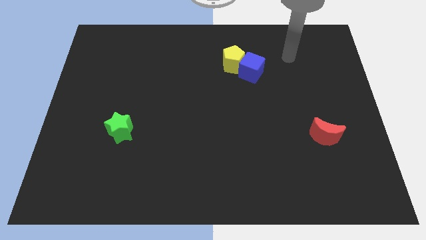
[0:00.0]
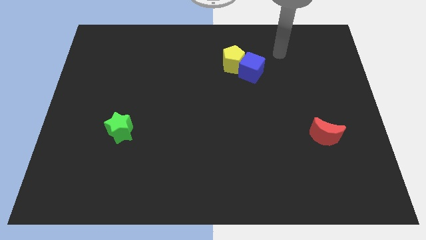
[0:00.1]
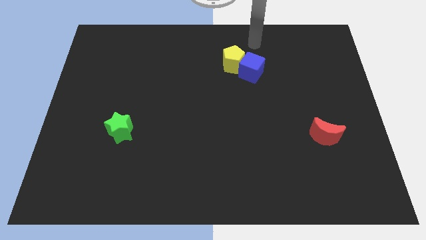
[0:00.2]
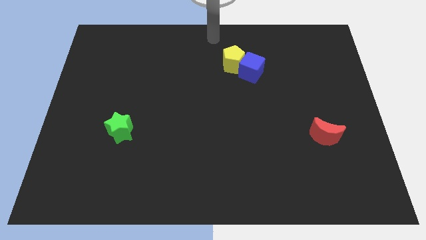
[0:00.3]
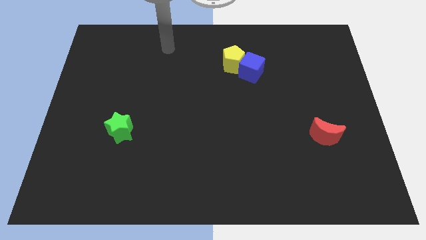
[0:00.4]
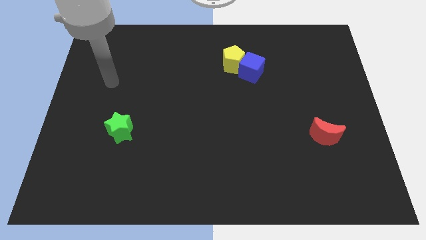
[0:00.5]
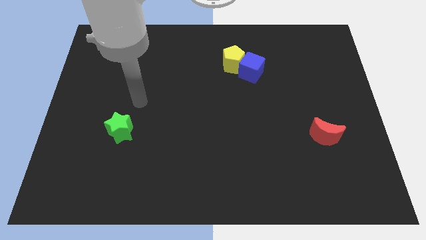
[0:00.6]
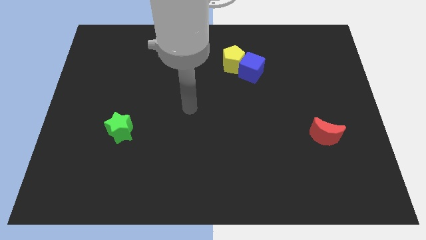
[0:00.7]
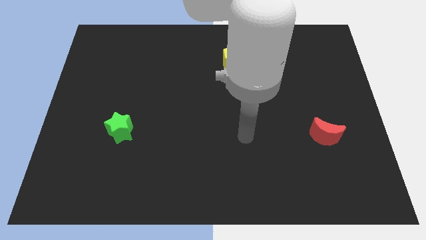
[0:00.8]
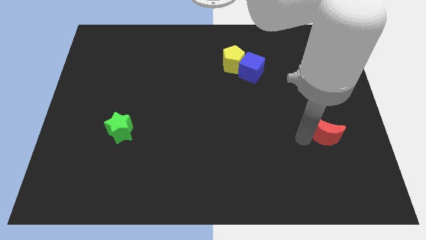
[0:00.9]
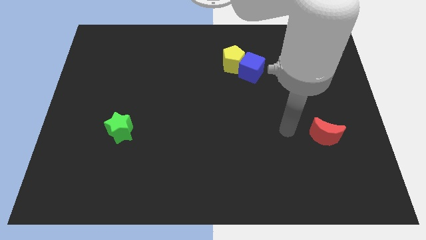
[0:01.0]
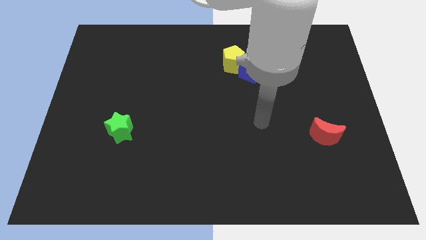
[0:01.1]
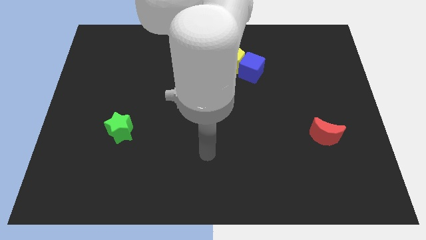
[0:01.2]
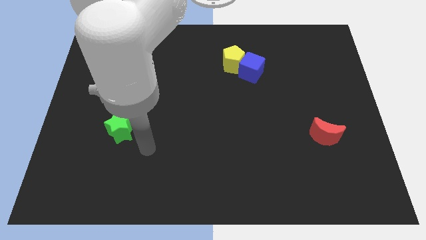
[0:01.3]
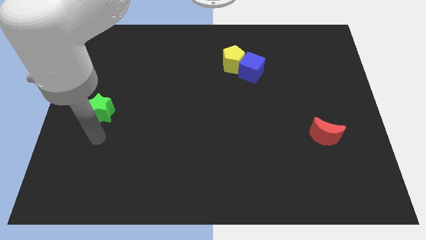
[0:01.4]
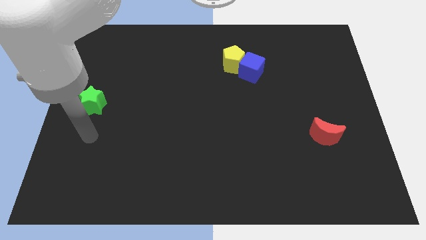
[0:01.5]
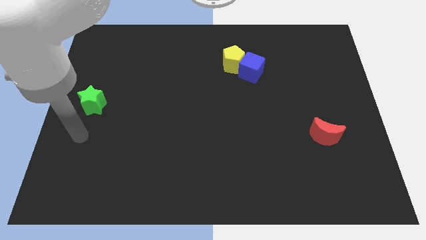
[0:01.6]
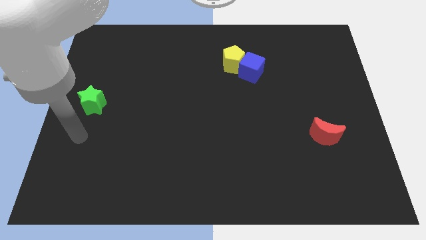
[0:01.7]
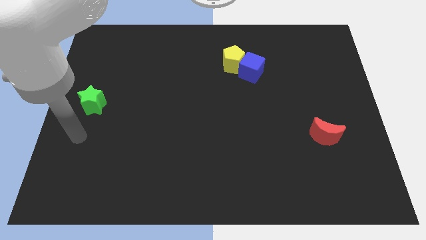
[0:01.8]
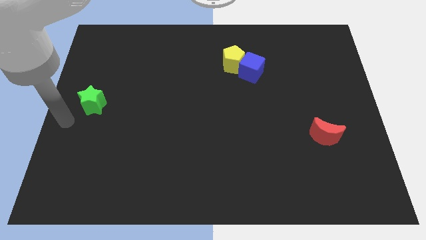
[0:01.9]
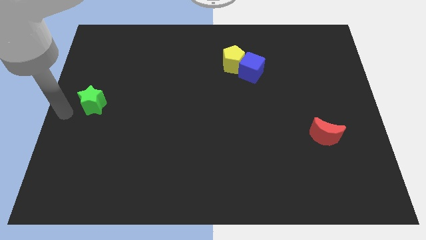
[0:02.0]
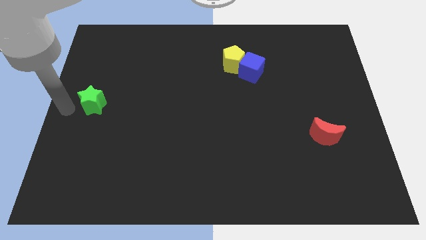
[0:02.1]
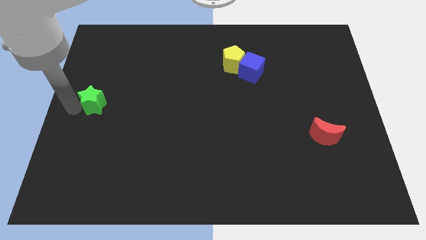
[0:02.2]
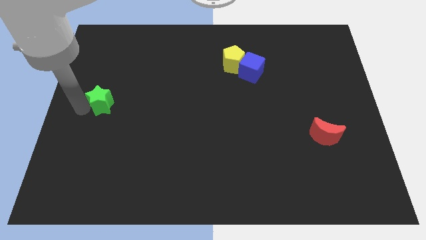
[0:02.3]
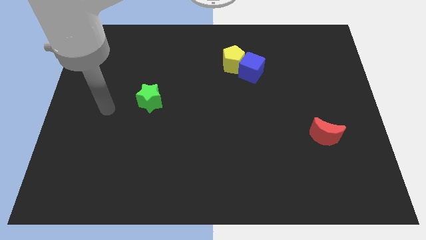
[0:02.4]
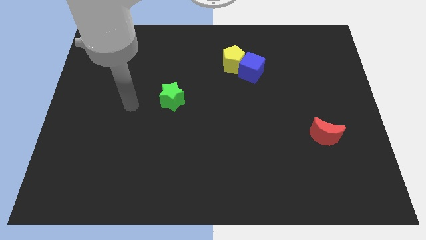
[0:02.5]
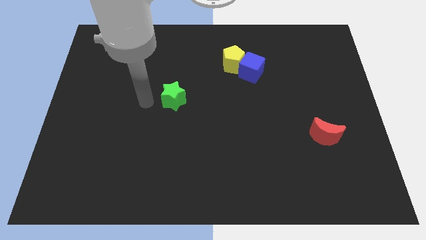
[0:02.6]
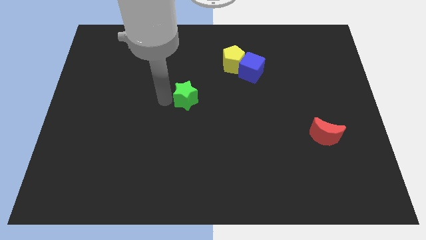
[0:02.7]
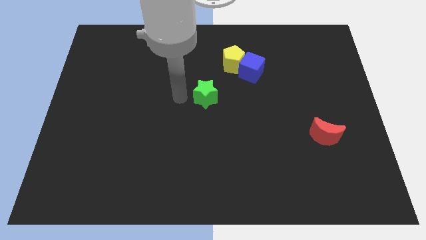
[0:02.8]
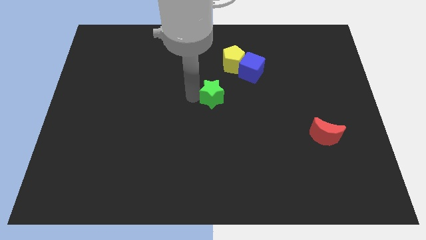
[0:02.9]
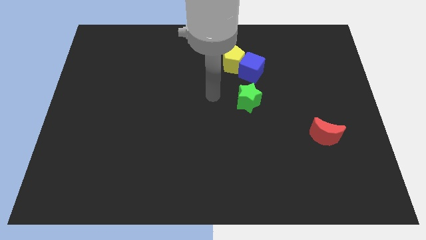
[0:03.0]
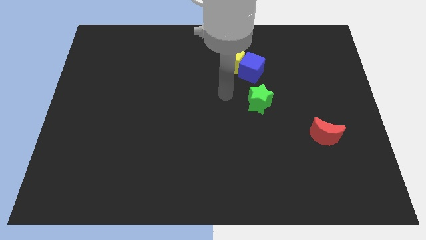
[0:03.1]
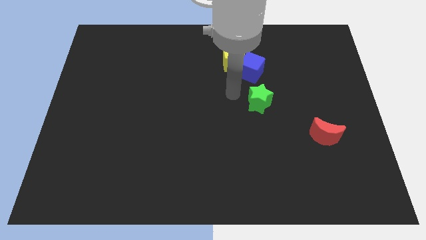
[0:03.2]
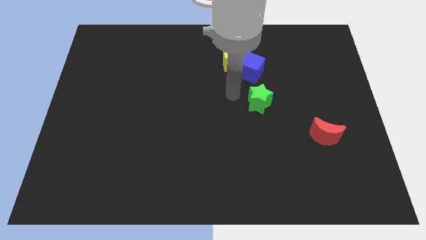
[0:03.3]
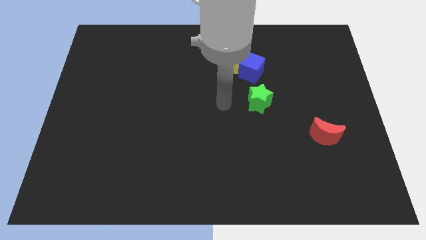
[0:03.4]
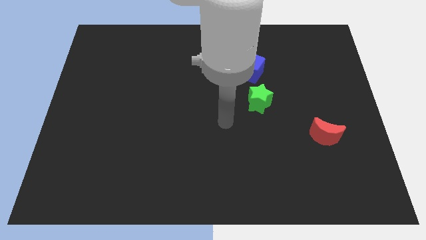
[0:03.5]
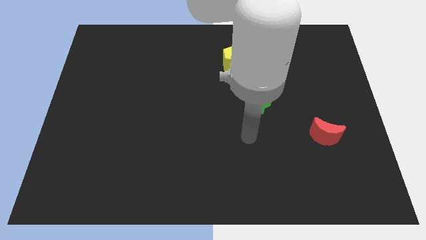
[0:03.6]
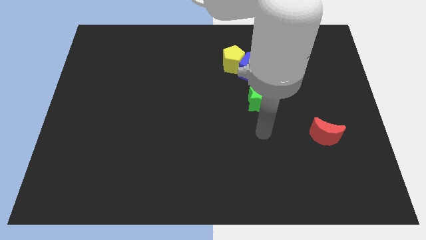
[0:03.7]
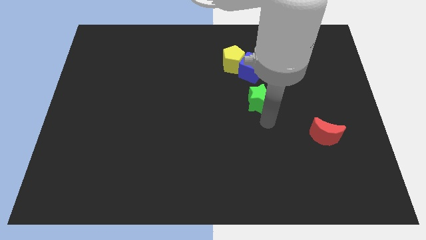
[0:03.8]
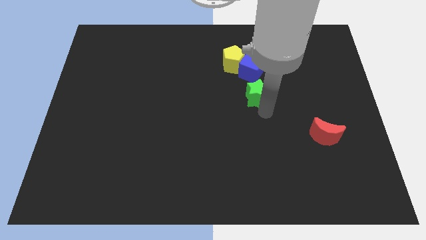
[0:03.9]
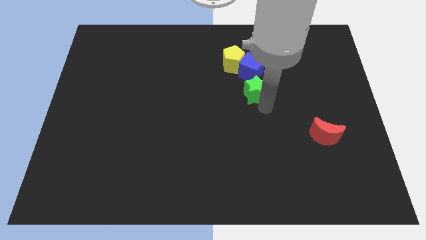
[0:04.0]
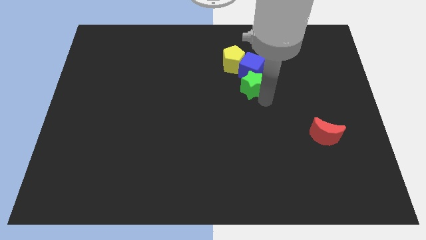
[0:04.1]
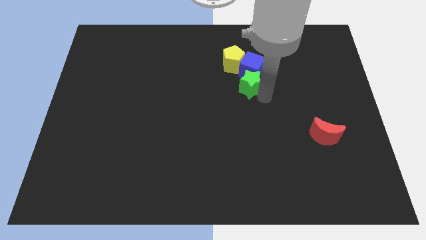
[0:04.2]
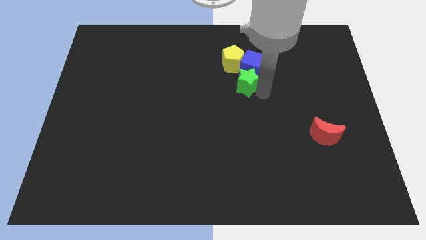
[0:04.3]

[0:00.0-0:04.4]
move the green star next to the blue cube

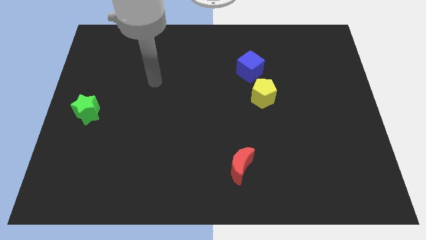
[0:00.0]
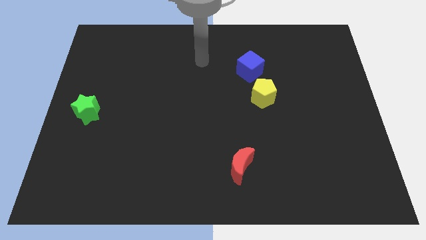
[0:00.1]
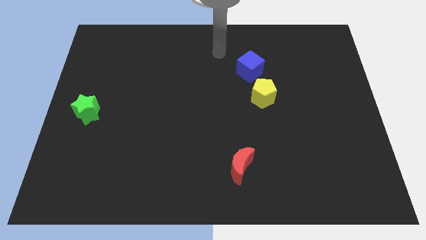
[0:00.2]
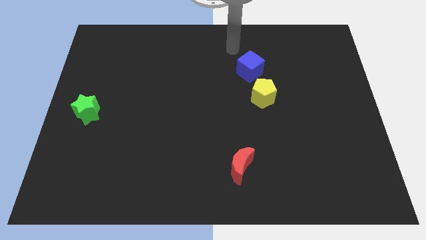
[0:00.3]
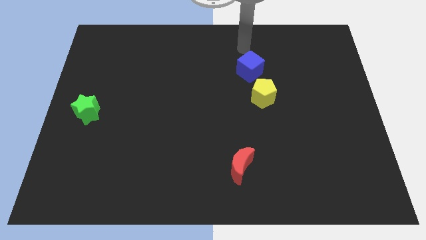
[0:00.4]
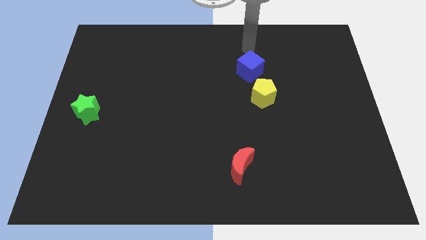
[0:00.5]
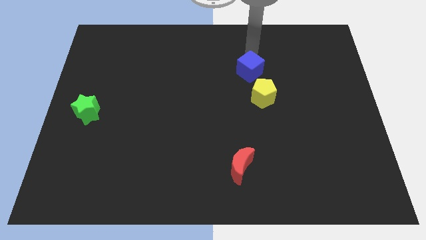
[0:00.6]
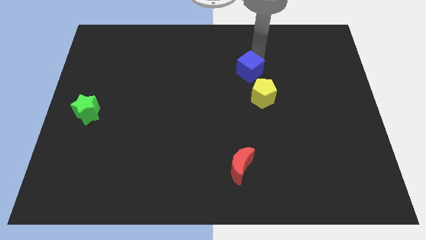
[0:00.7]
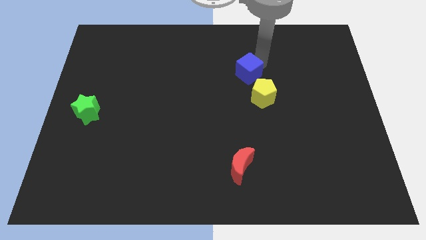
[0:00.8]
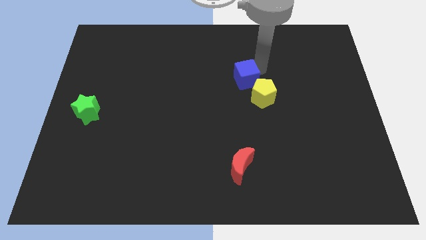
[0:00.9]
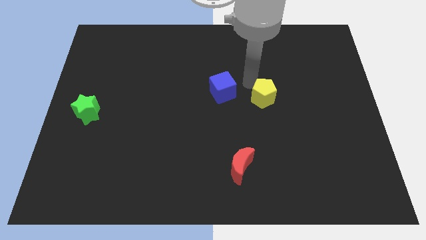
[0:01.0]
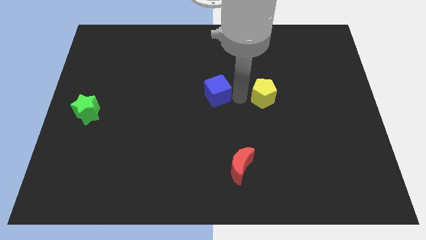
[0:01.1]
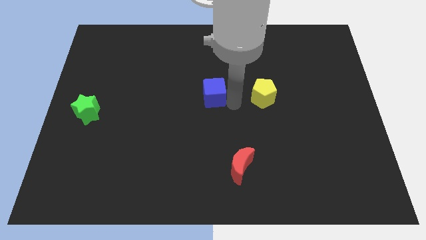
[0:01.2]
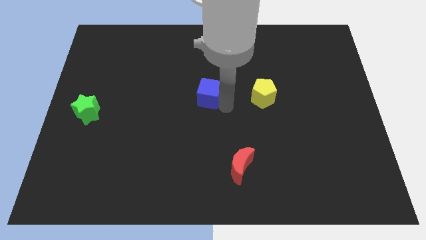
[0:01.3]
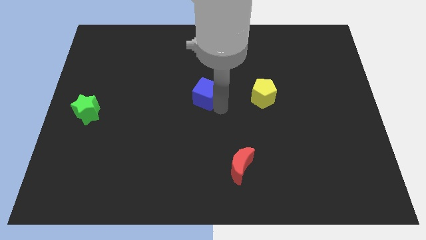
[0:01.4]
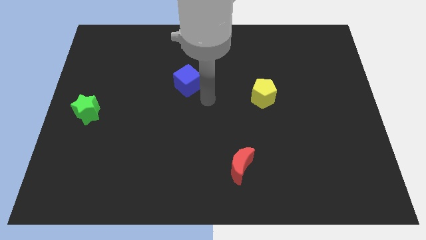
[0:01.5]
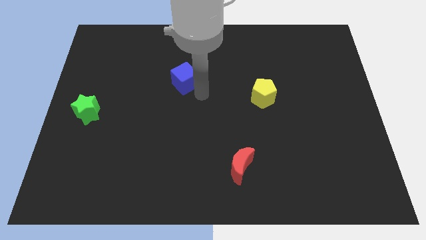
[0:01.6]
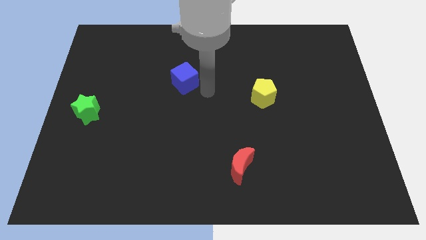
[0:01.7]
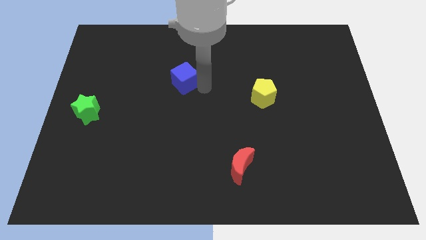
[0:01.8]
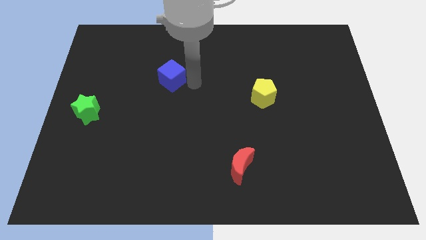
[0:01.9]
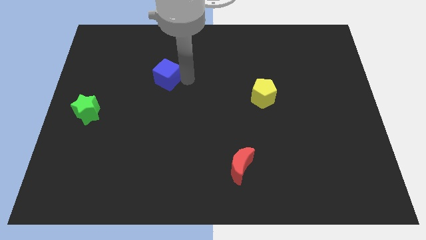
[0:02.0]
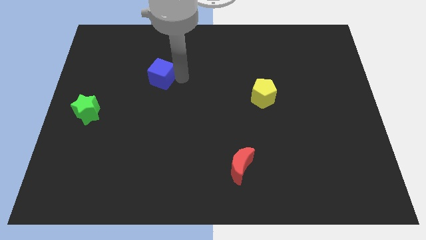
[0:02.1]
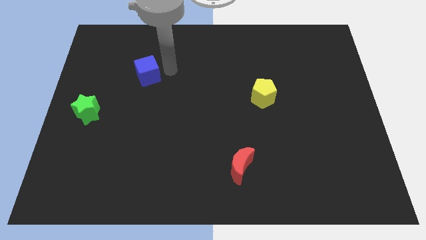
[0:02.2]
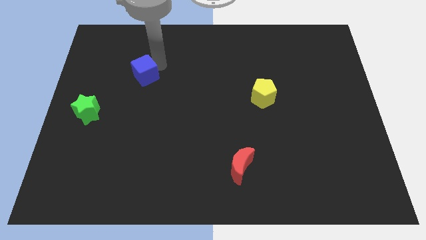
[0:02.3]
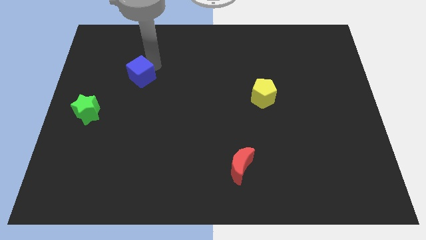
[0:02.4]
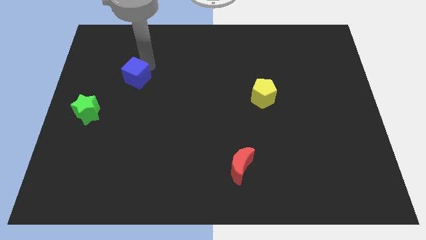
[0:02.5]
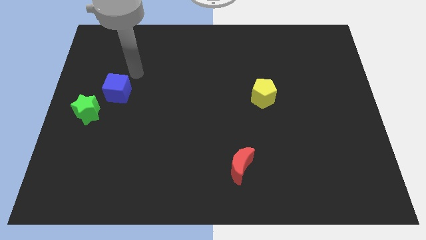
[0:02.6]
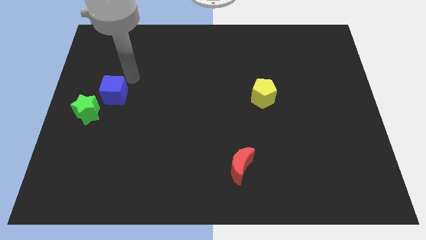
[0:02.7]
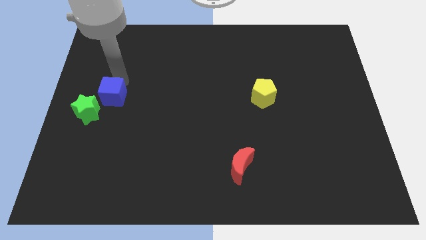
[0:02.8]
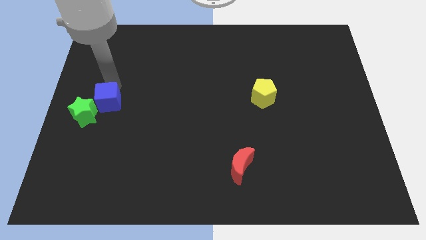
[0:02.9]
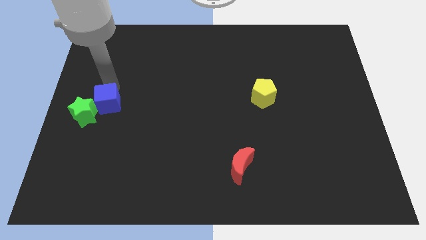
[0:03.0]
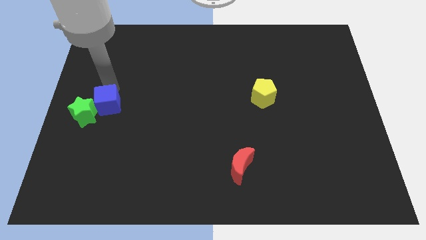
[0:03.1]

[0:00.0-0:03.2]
push the cube next to the green star

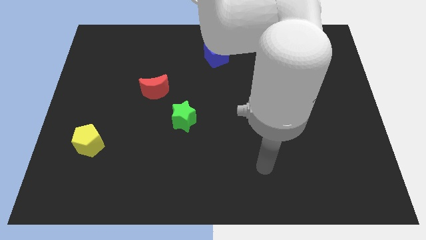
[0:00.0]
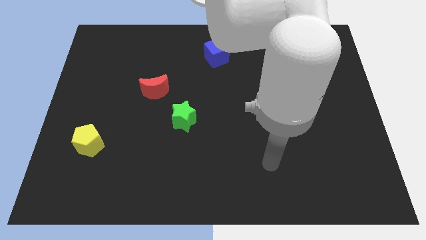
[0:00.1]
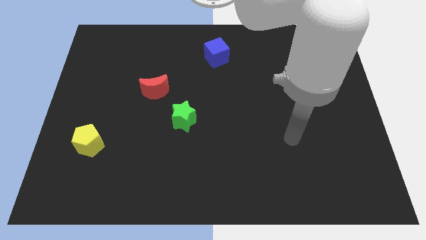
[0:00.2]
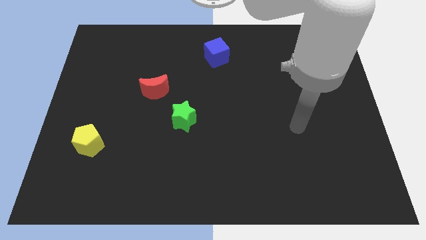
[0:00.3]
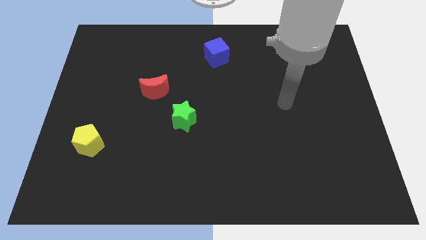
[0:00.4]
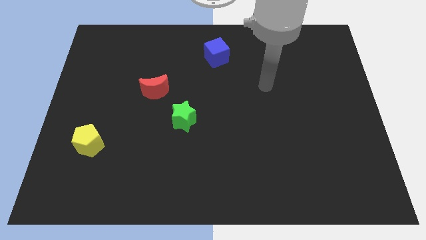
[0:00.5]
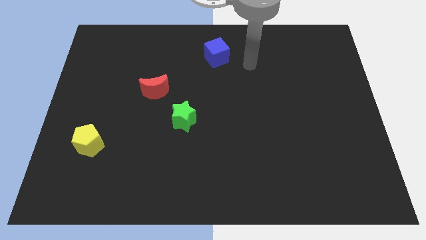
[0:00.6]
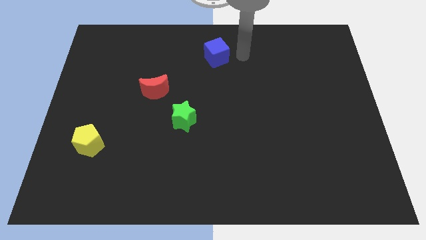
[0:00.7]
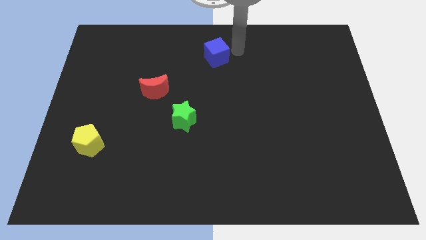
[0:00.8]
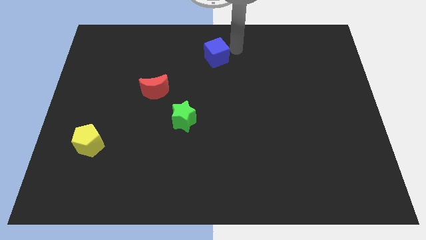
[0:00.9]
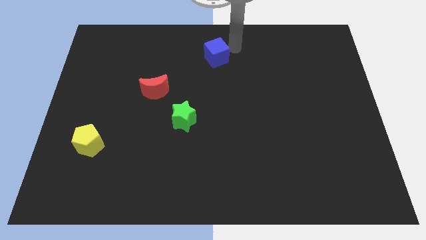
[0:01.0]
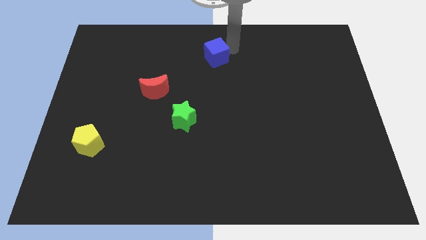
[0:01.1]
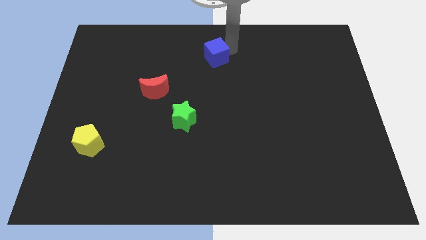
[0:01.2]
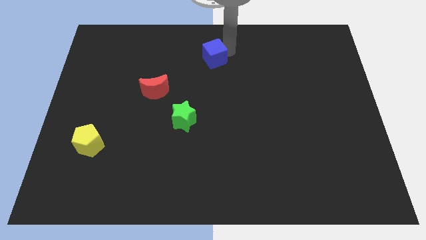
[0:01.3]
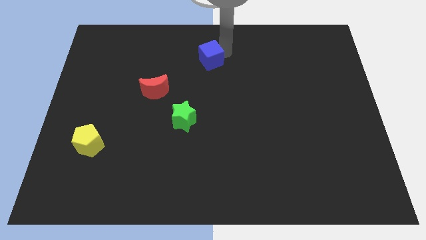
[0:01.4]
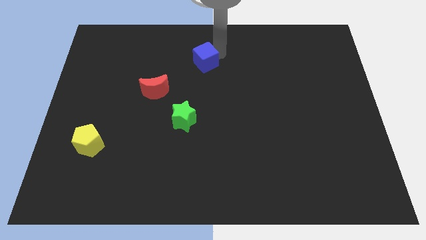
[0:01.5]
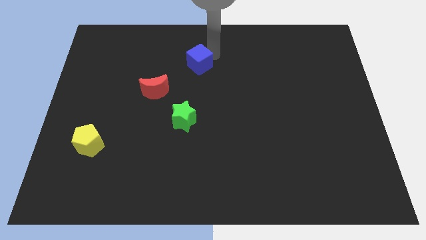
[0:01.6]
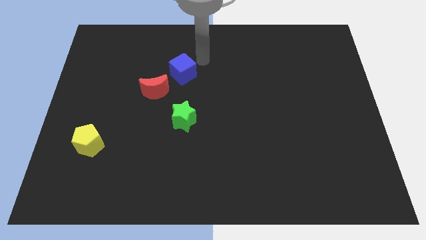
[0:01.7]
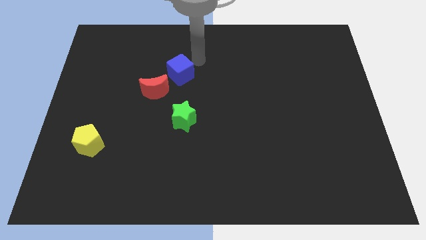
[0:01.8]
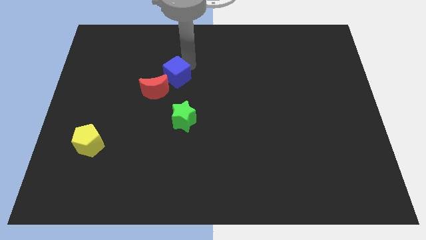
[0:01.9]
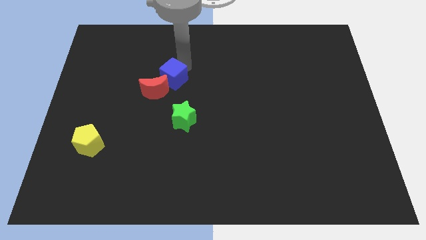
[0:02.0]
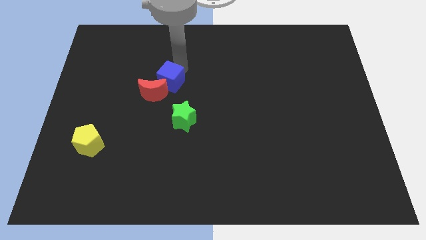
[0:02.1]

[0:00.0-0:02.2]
push the cube next to the red block
